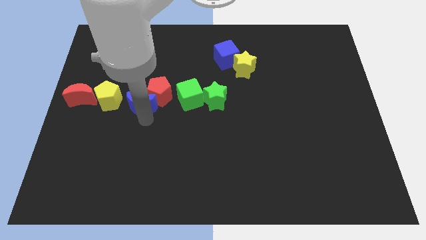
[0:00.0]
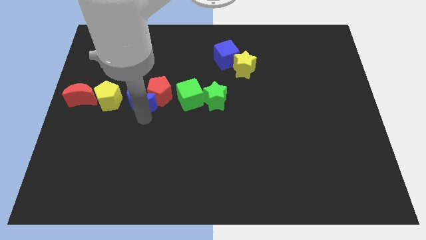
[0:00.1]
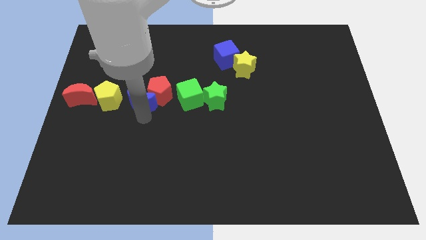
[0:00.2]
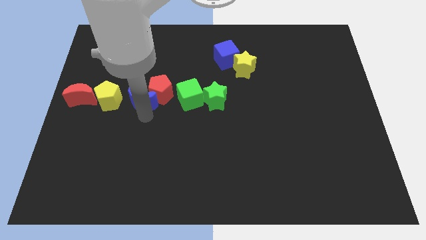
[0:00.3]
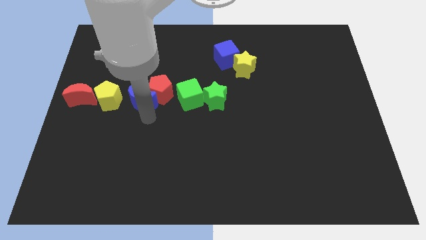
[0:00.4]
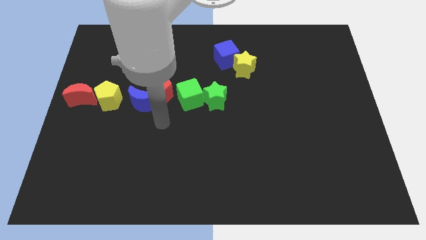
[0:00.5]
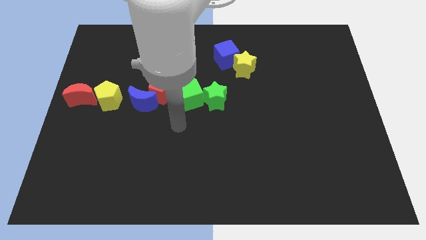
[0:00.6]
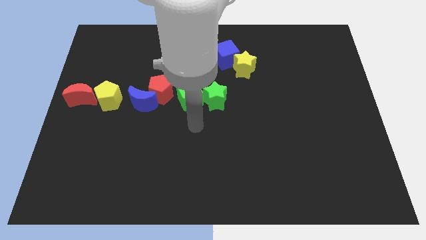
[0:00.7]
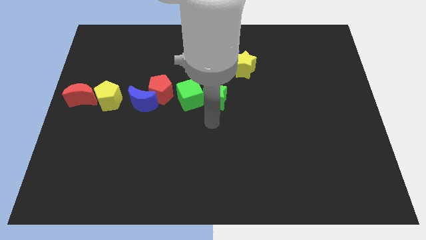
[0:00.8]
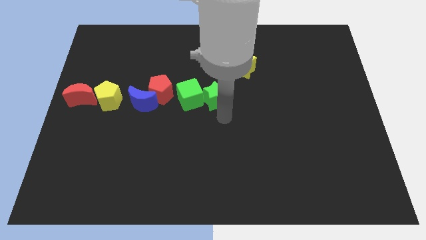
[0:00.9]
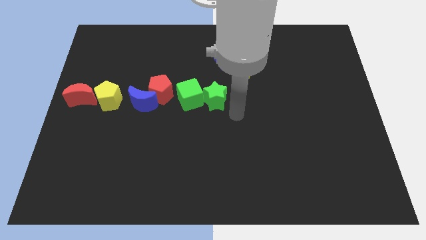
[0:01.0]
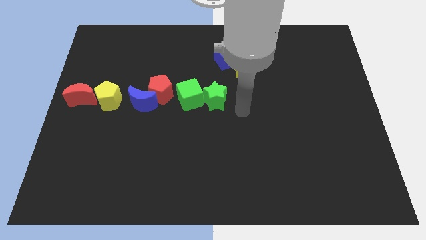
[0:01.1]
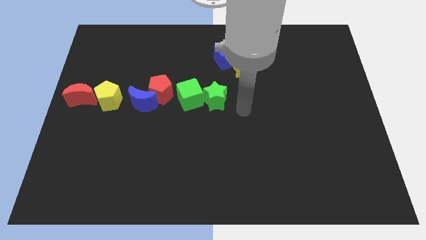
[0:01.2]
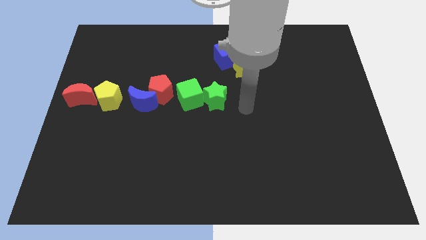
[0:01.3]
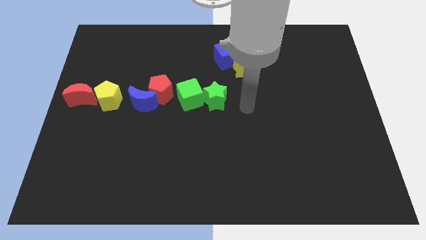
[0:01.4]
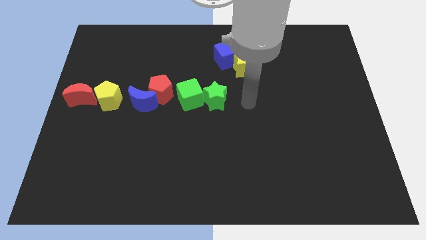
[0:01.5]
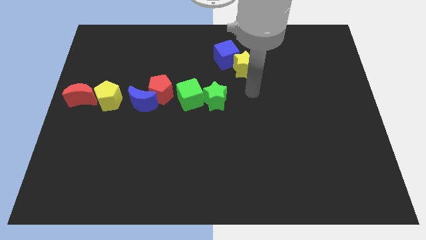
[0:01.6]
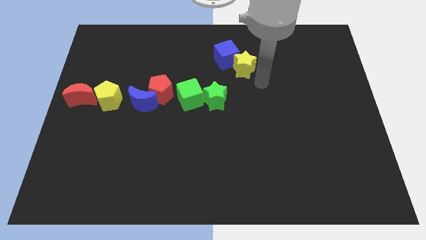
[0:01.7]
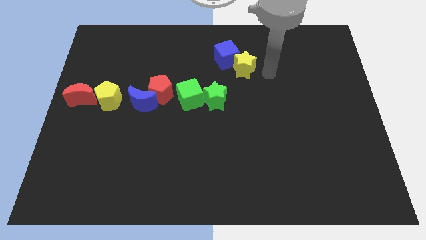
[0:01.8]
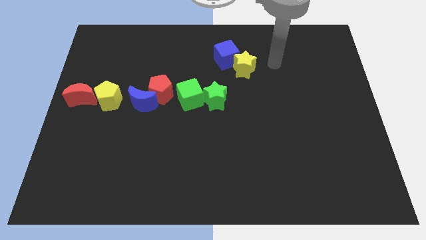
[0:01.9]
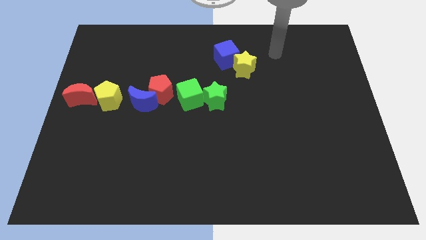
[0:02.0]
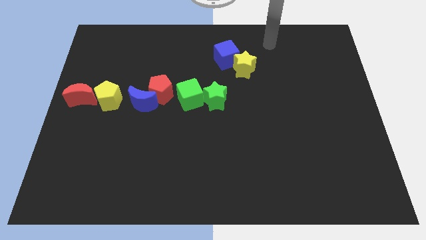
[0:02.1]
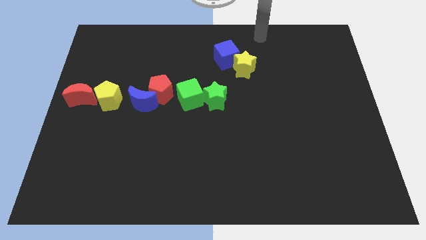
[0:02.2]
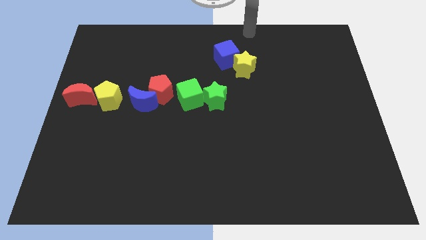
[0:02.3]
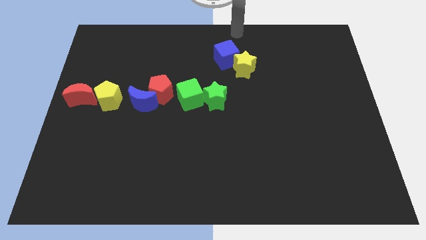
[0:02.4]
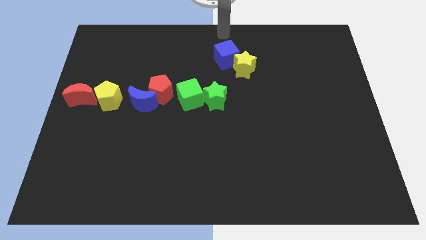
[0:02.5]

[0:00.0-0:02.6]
point your hand at the top side of the blue cube

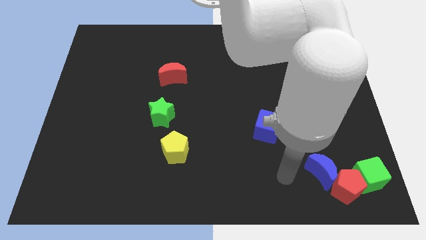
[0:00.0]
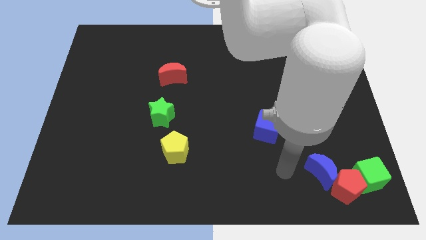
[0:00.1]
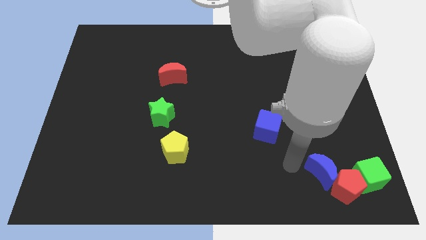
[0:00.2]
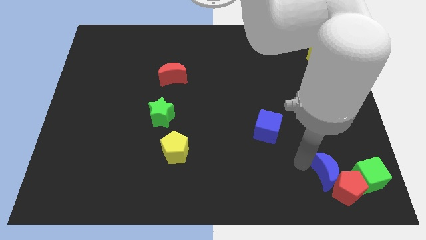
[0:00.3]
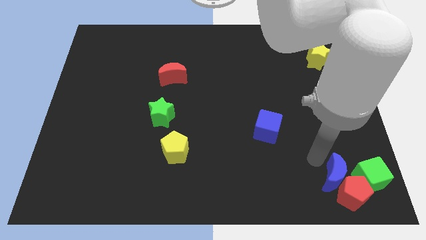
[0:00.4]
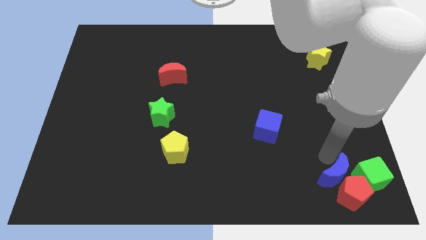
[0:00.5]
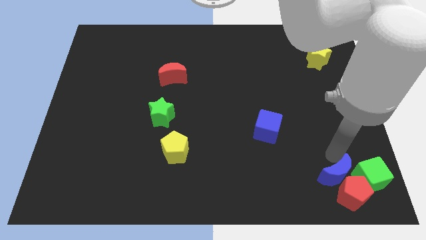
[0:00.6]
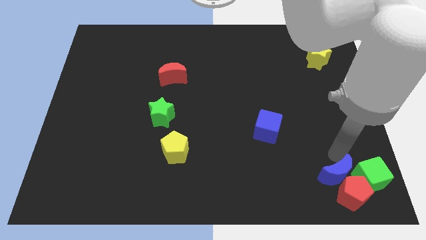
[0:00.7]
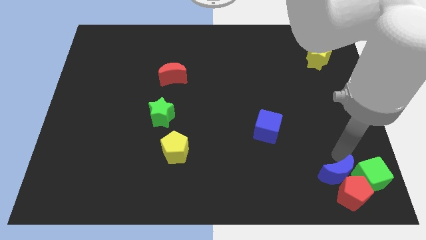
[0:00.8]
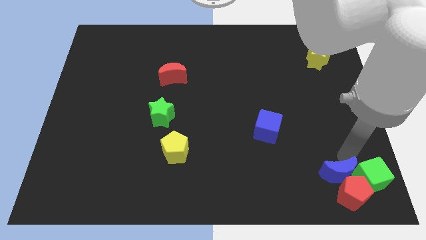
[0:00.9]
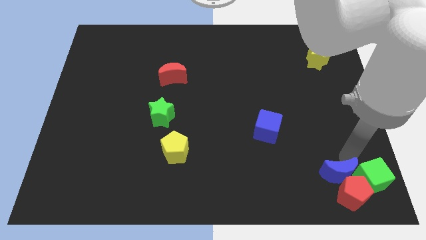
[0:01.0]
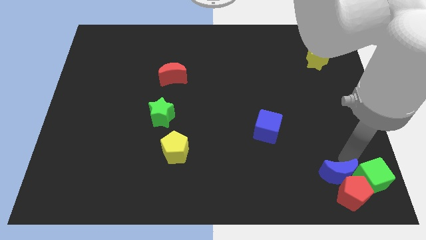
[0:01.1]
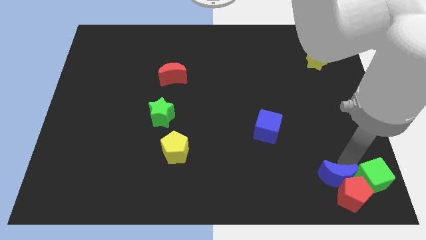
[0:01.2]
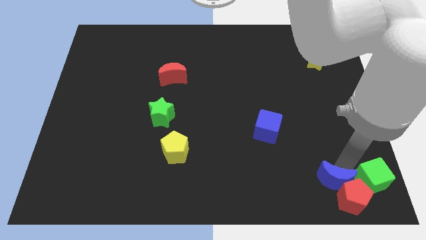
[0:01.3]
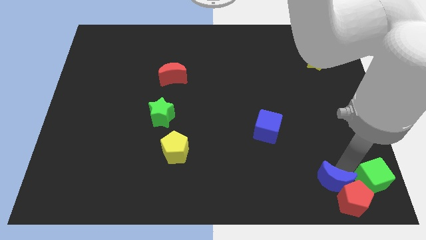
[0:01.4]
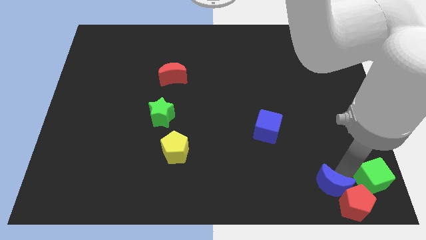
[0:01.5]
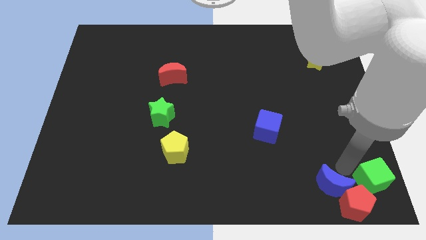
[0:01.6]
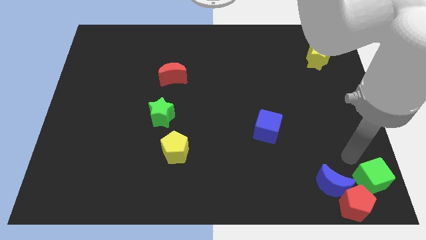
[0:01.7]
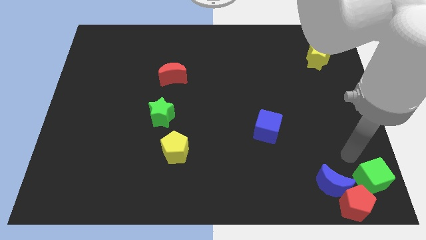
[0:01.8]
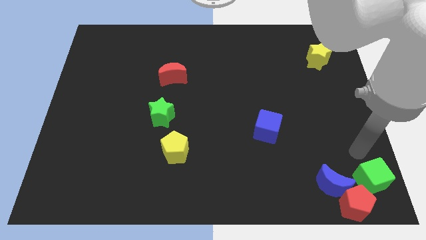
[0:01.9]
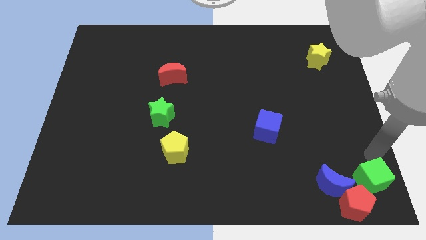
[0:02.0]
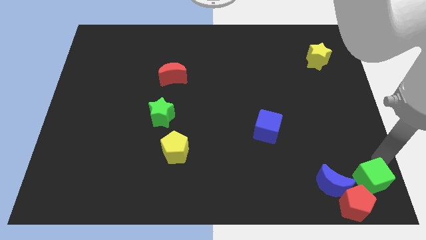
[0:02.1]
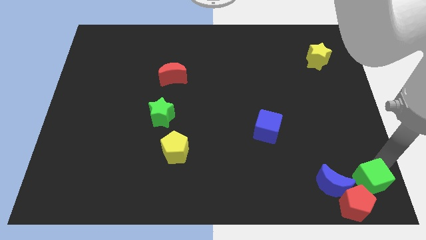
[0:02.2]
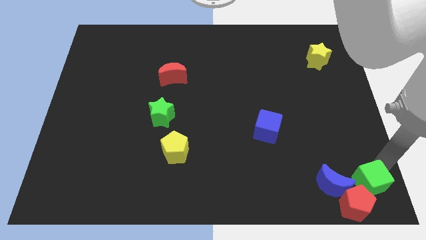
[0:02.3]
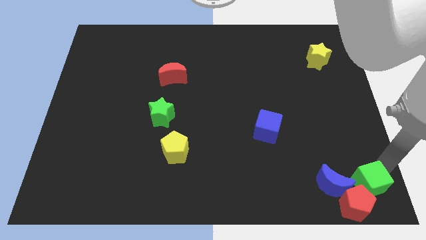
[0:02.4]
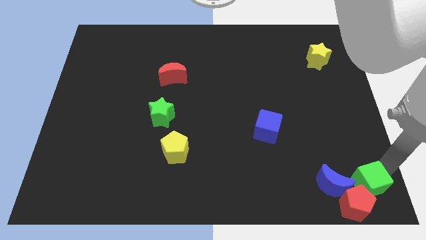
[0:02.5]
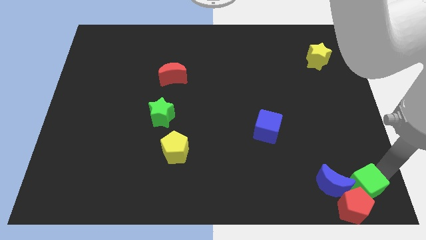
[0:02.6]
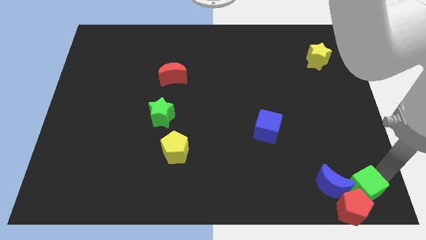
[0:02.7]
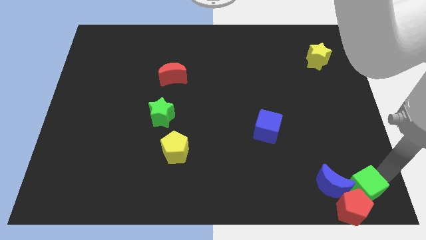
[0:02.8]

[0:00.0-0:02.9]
push the blue crescent close to the gren cube and red pentagon

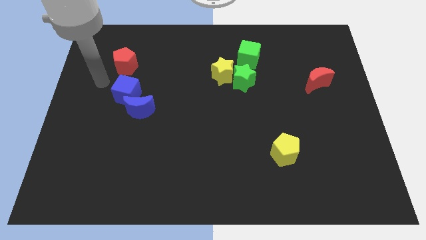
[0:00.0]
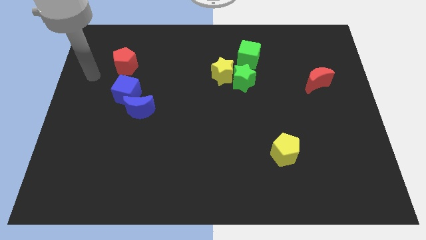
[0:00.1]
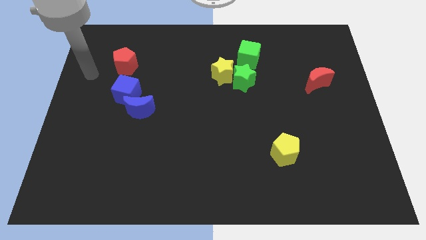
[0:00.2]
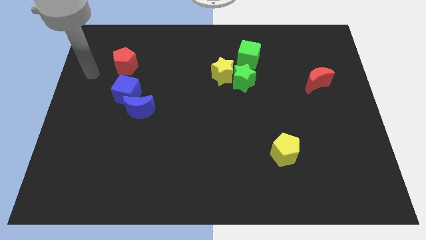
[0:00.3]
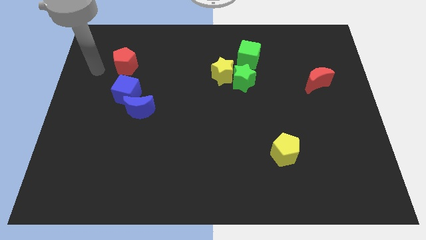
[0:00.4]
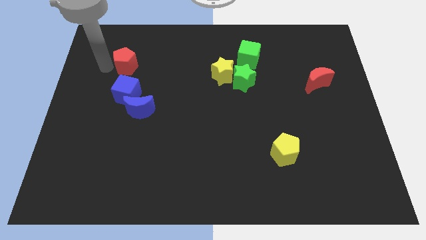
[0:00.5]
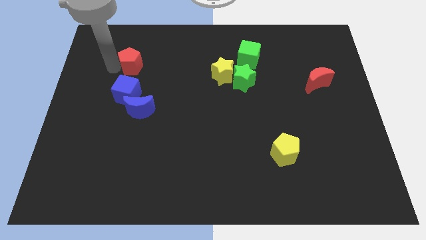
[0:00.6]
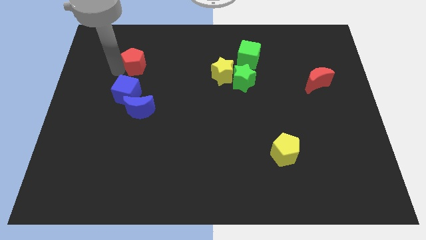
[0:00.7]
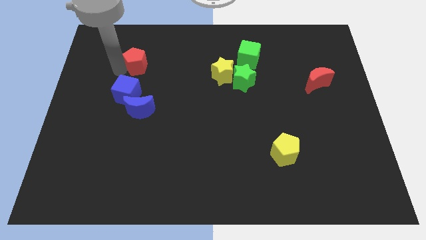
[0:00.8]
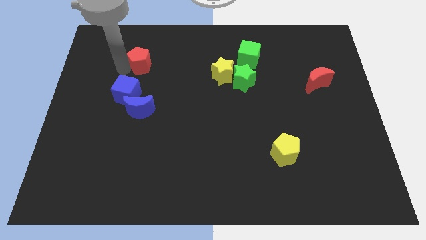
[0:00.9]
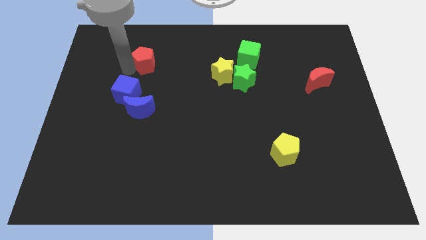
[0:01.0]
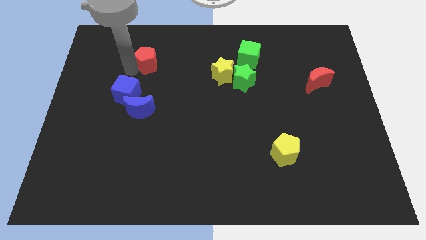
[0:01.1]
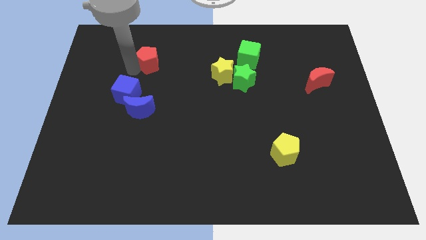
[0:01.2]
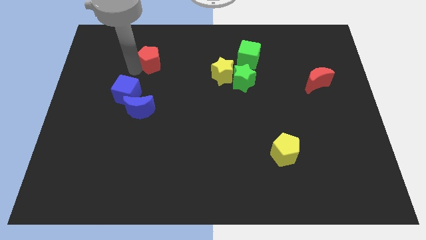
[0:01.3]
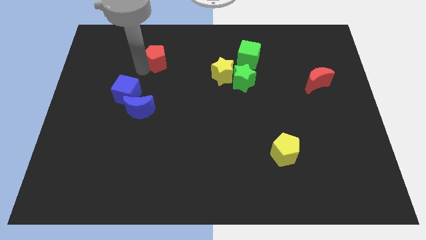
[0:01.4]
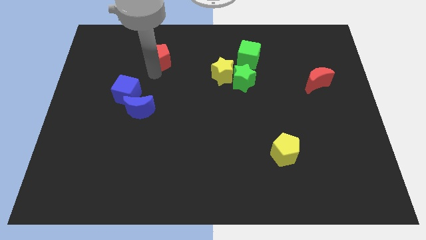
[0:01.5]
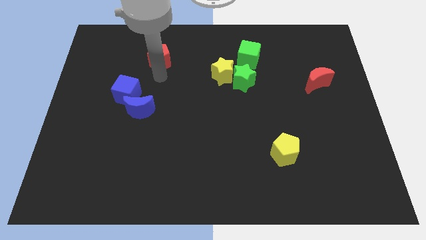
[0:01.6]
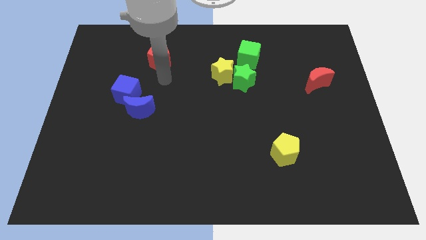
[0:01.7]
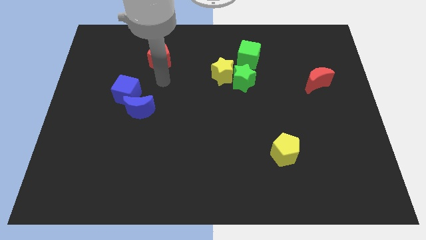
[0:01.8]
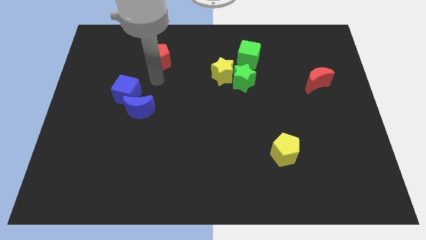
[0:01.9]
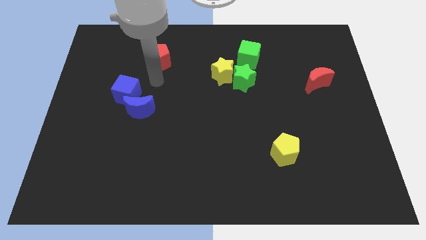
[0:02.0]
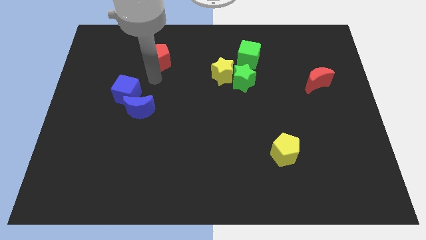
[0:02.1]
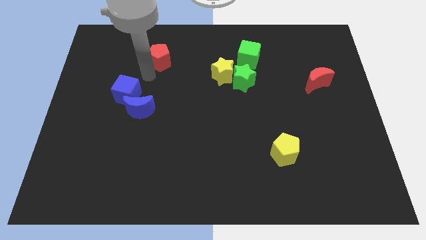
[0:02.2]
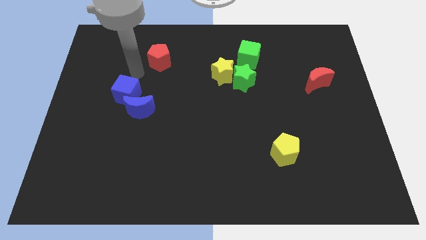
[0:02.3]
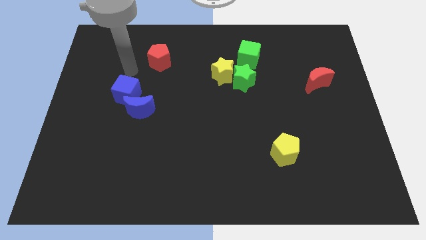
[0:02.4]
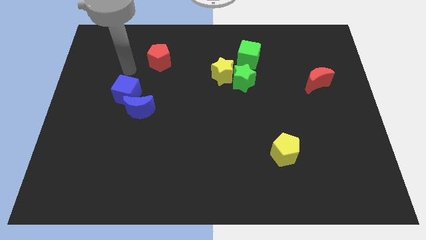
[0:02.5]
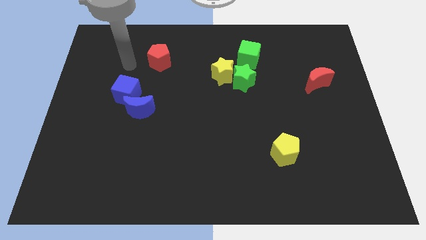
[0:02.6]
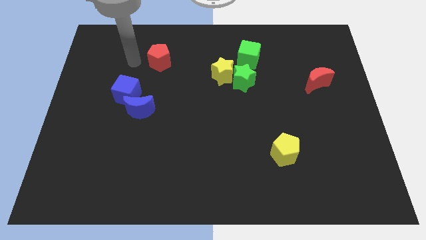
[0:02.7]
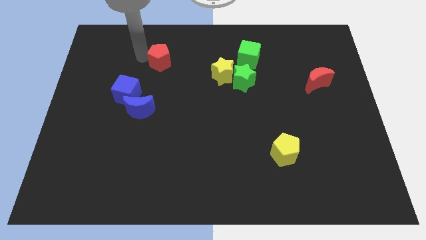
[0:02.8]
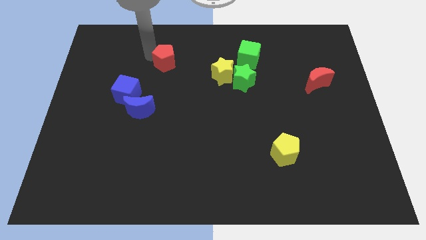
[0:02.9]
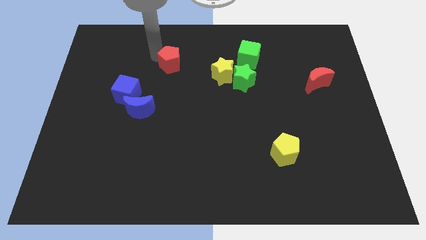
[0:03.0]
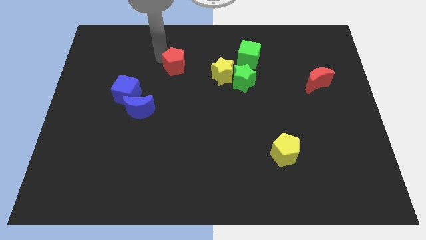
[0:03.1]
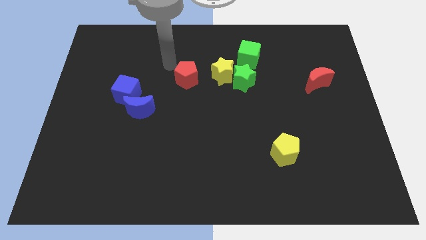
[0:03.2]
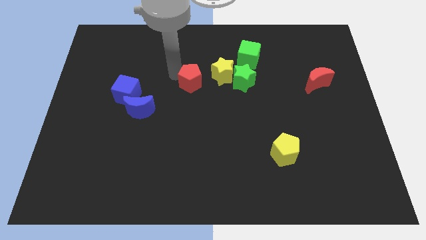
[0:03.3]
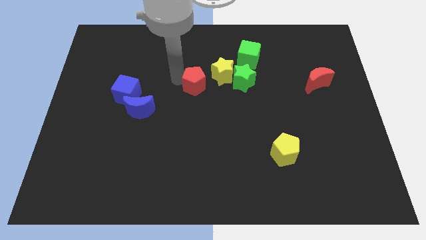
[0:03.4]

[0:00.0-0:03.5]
place the red pentagon in between the green star and blue cube
